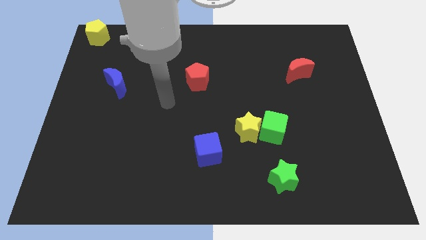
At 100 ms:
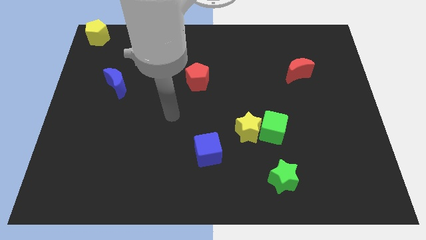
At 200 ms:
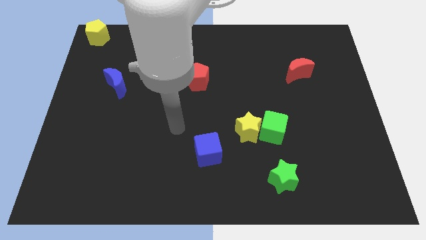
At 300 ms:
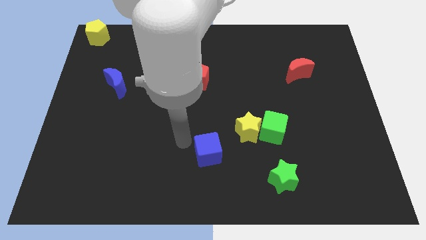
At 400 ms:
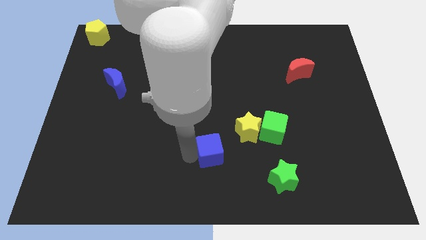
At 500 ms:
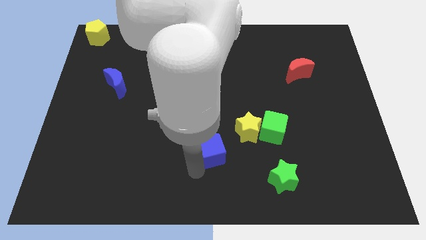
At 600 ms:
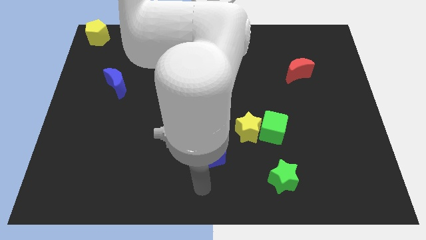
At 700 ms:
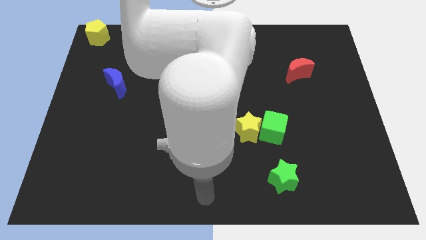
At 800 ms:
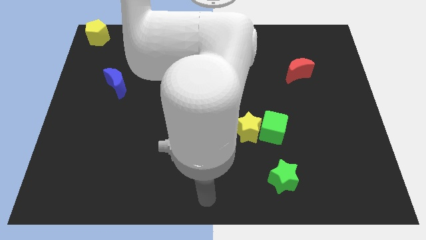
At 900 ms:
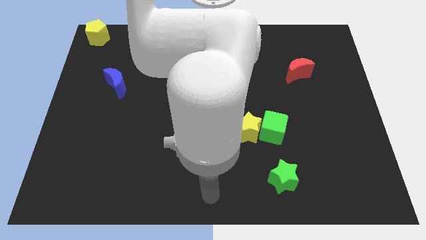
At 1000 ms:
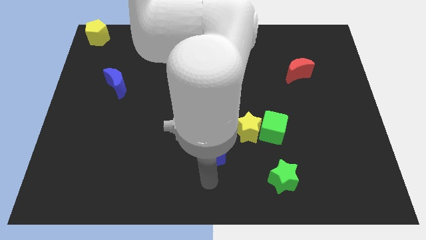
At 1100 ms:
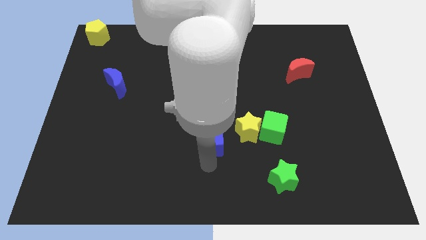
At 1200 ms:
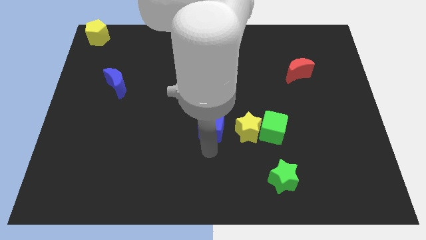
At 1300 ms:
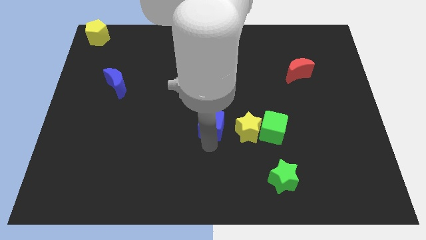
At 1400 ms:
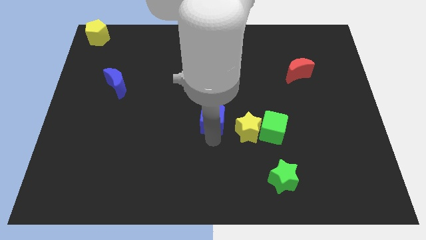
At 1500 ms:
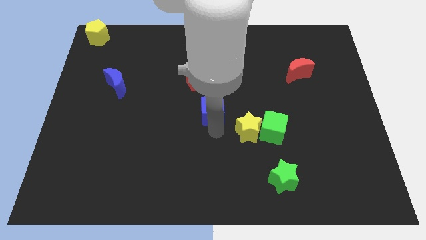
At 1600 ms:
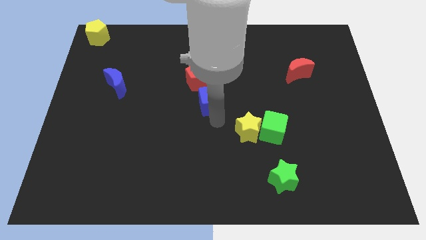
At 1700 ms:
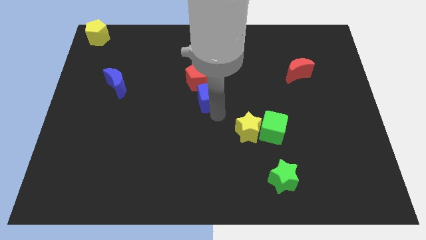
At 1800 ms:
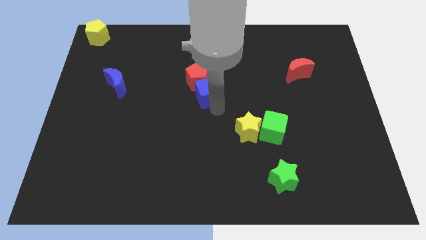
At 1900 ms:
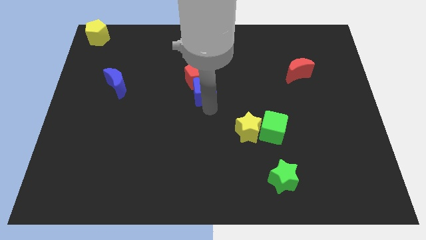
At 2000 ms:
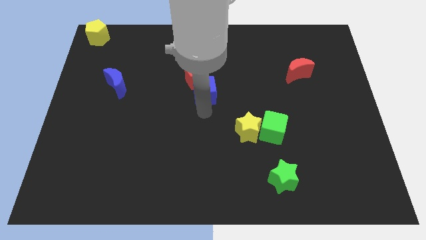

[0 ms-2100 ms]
push the blue cube below the red pentagon

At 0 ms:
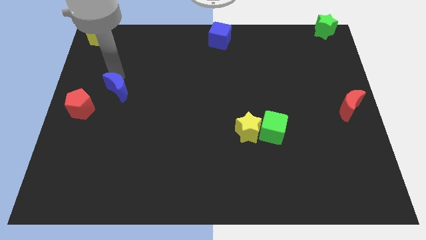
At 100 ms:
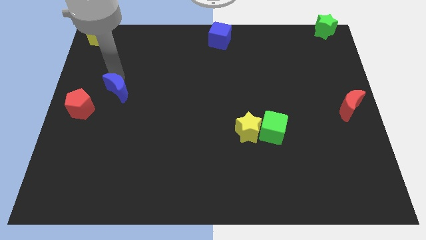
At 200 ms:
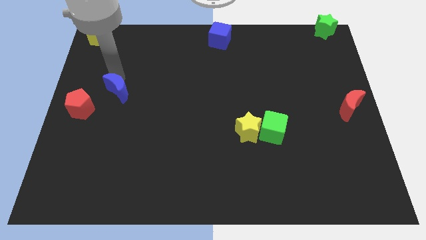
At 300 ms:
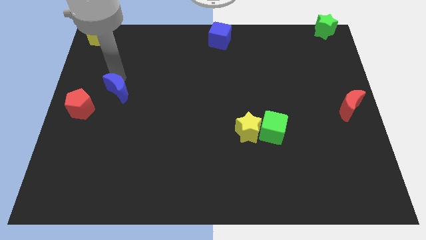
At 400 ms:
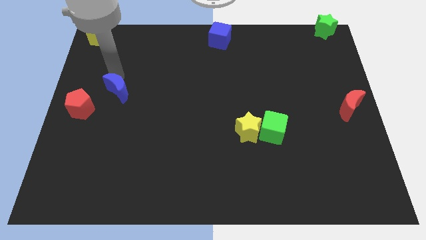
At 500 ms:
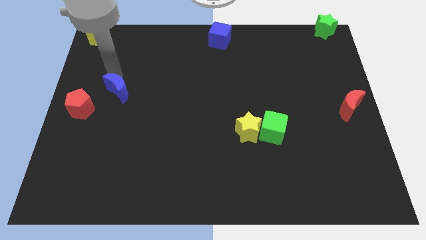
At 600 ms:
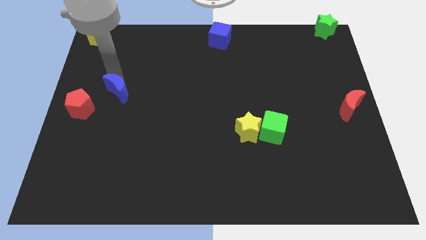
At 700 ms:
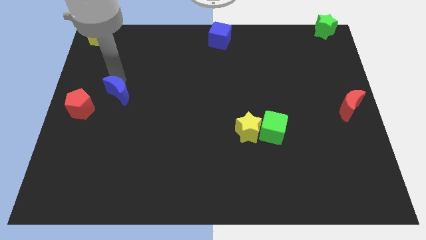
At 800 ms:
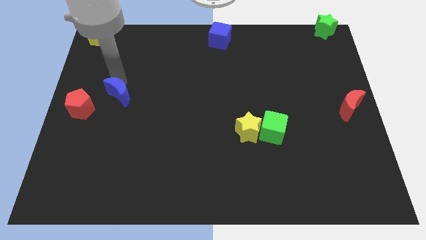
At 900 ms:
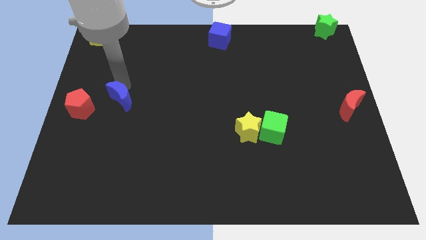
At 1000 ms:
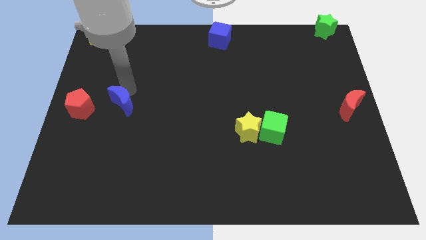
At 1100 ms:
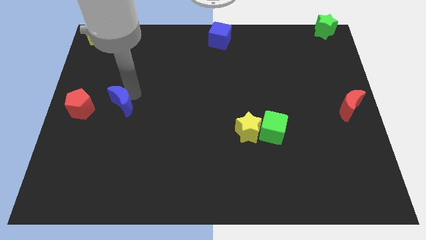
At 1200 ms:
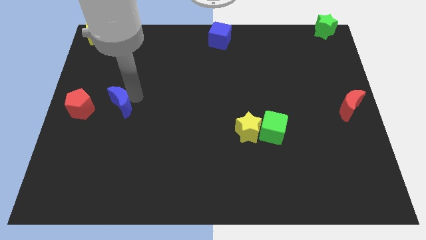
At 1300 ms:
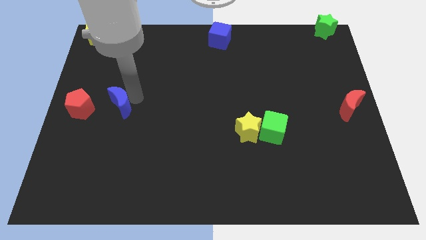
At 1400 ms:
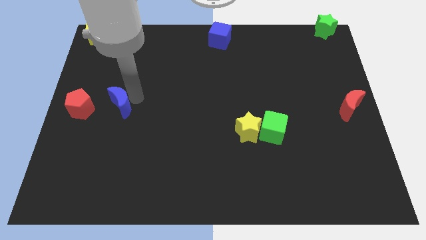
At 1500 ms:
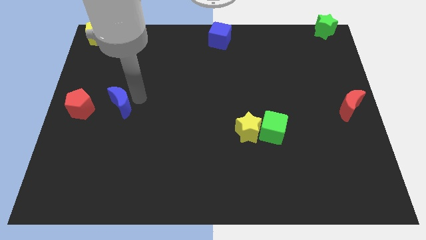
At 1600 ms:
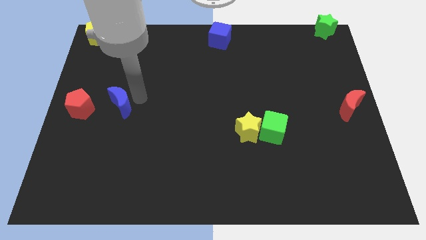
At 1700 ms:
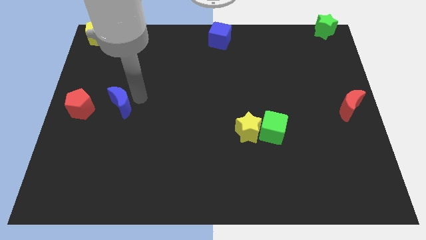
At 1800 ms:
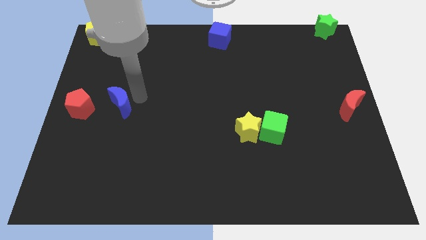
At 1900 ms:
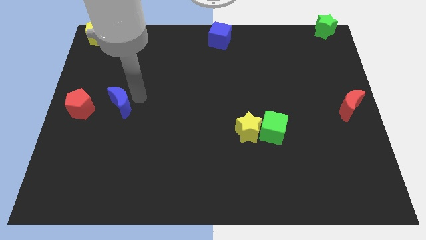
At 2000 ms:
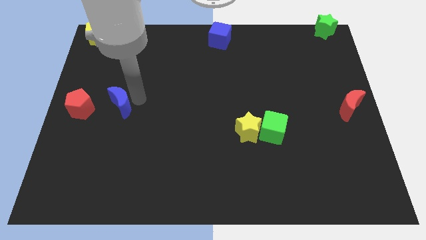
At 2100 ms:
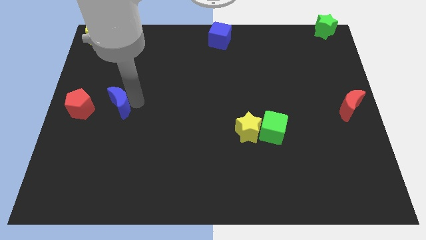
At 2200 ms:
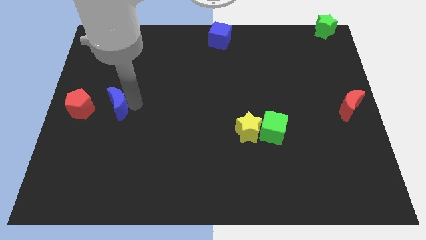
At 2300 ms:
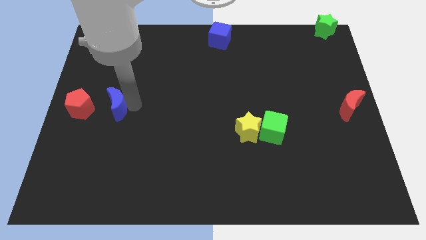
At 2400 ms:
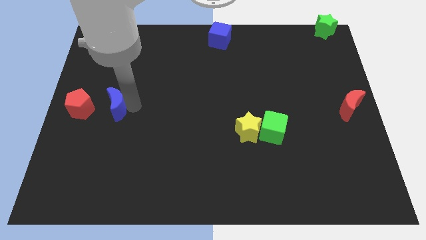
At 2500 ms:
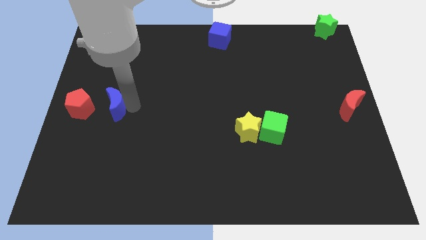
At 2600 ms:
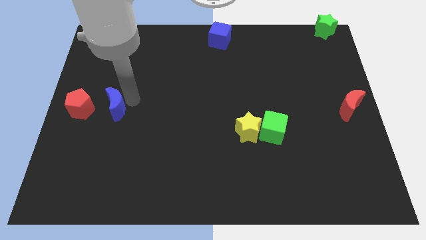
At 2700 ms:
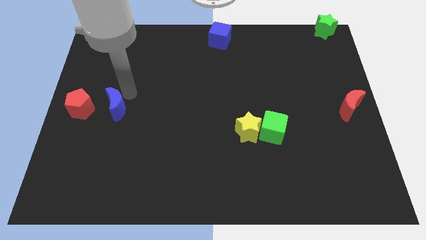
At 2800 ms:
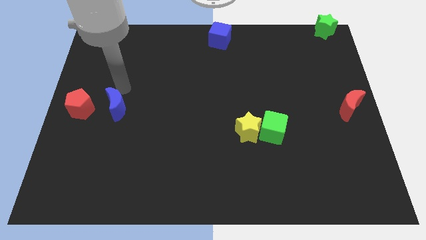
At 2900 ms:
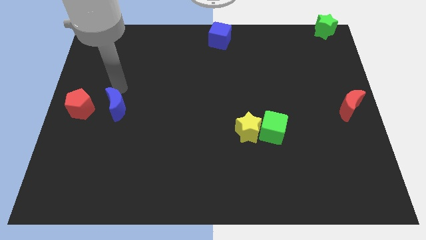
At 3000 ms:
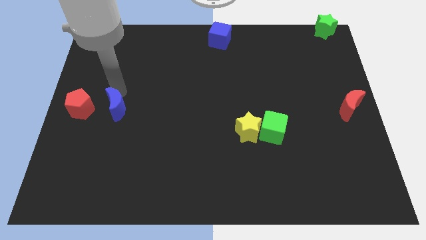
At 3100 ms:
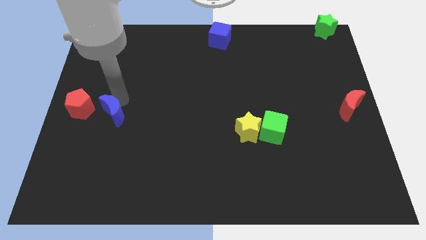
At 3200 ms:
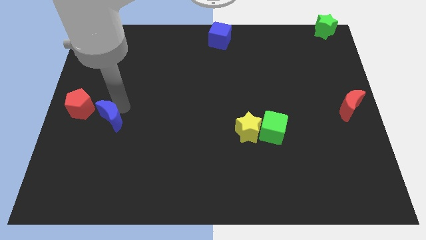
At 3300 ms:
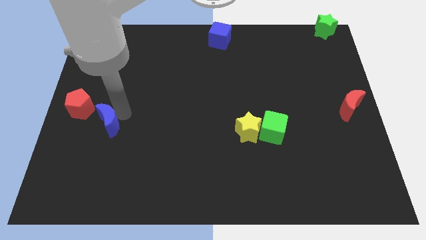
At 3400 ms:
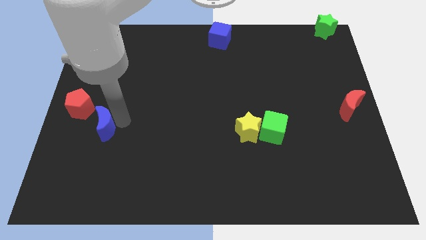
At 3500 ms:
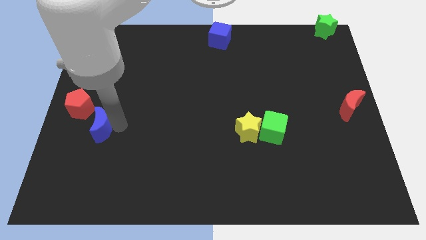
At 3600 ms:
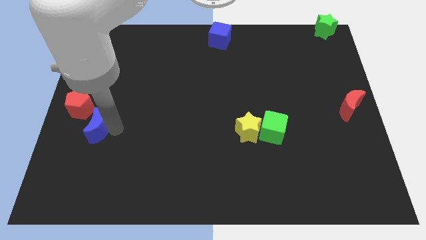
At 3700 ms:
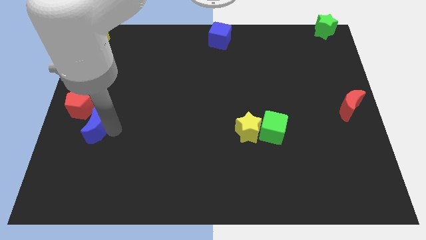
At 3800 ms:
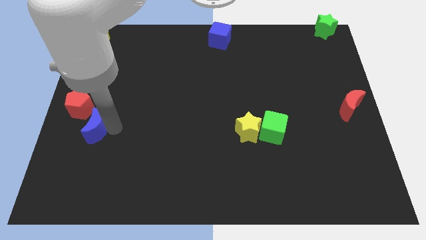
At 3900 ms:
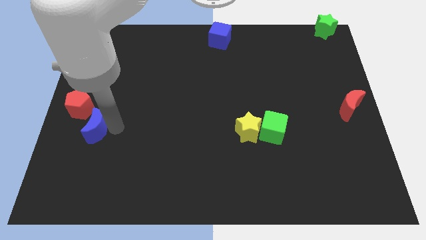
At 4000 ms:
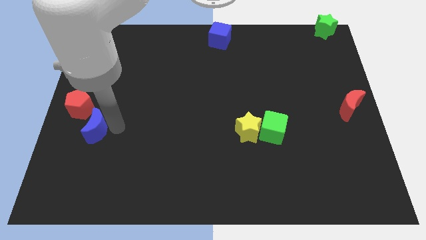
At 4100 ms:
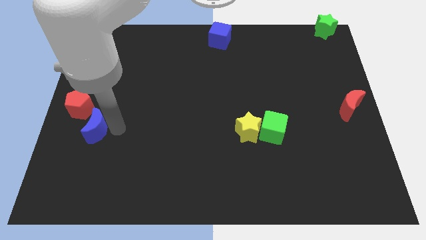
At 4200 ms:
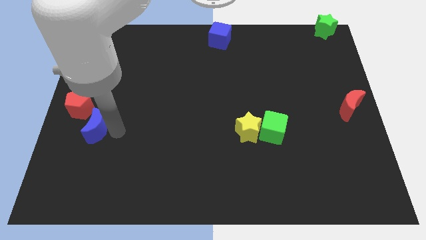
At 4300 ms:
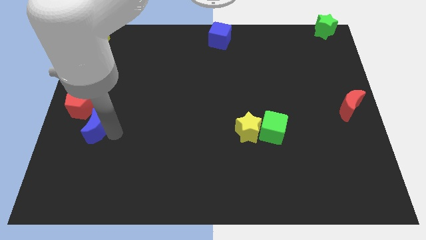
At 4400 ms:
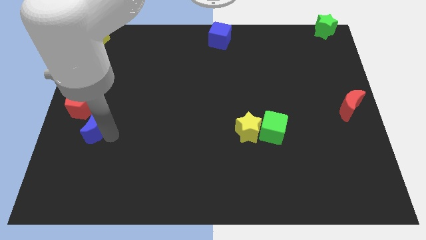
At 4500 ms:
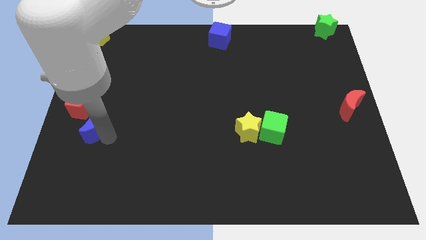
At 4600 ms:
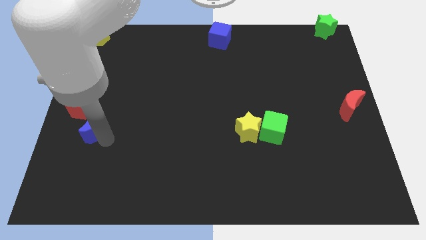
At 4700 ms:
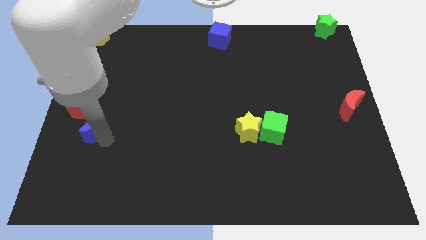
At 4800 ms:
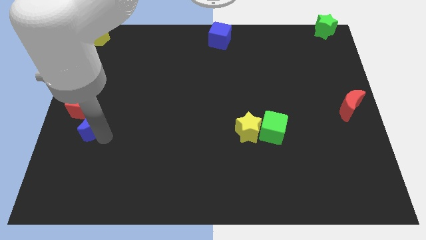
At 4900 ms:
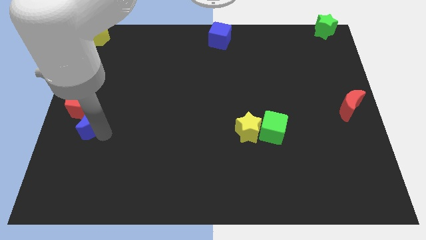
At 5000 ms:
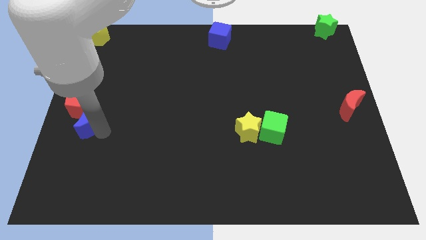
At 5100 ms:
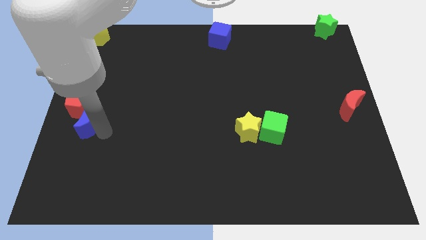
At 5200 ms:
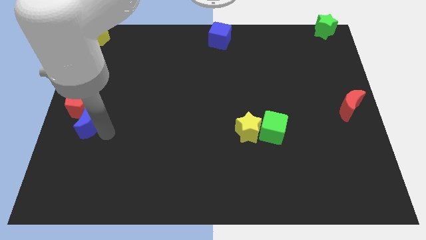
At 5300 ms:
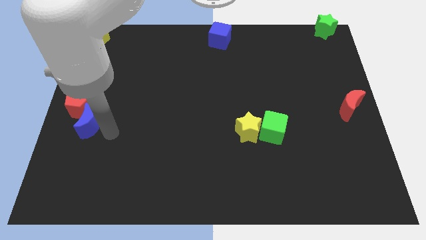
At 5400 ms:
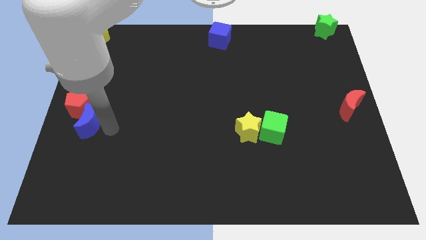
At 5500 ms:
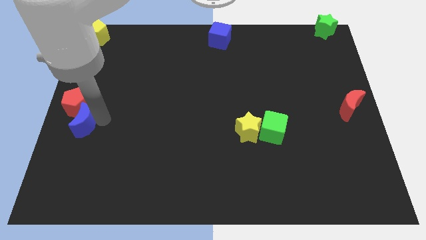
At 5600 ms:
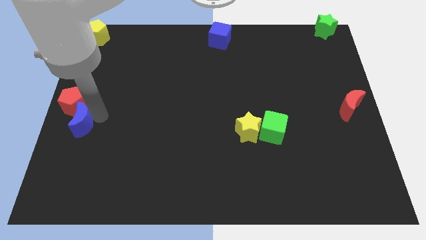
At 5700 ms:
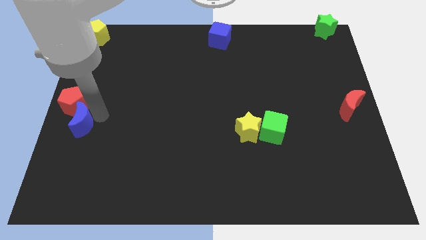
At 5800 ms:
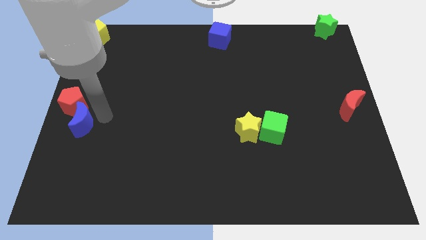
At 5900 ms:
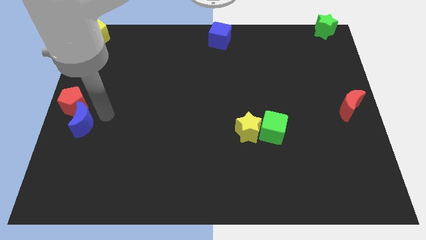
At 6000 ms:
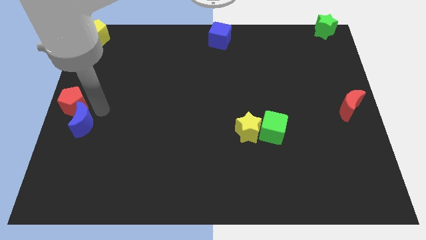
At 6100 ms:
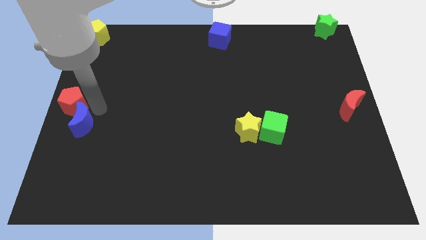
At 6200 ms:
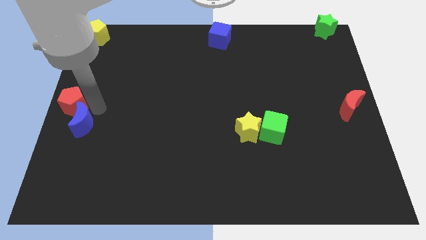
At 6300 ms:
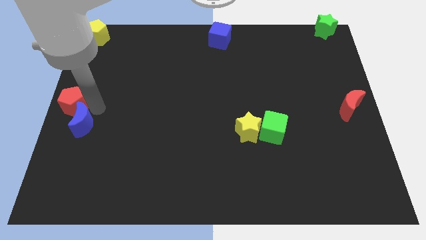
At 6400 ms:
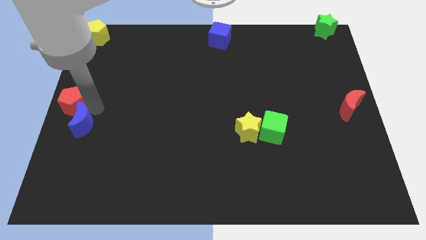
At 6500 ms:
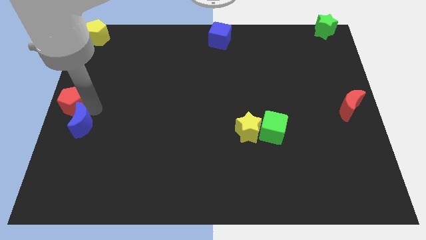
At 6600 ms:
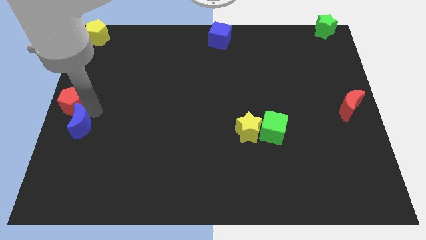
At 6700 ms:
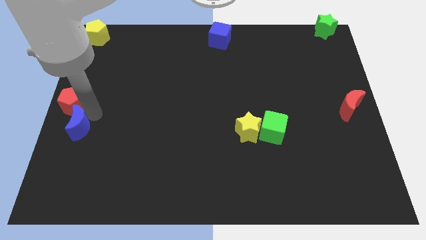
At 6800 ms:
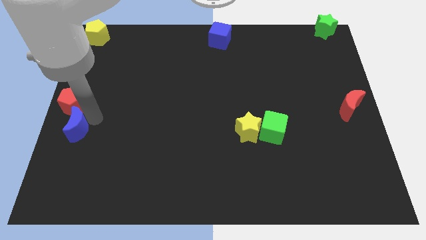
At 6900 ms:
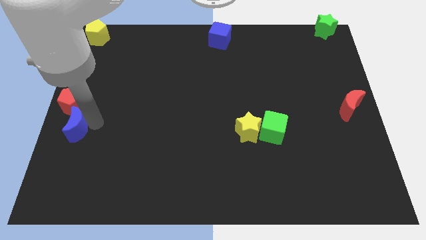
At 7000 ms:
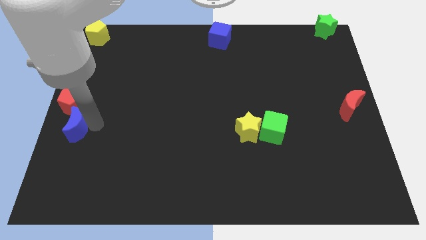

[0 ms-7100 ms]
place blue crescent down to the red pentagon
